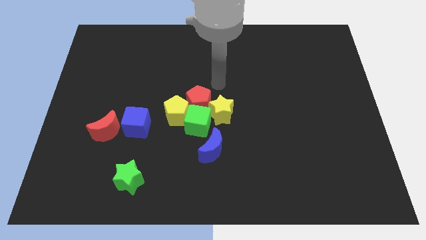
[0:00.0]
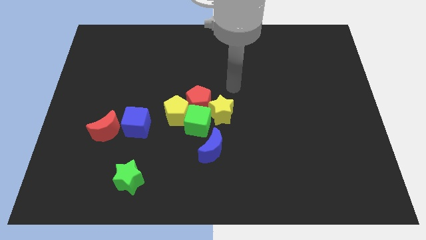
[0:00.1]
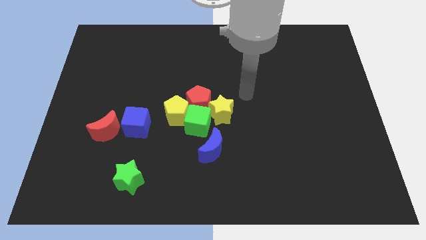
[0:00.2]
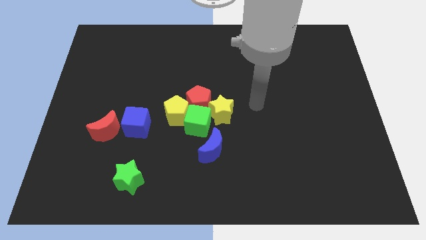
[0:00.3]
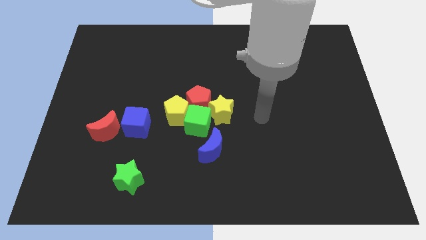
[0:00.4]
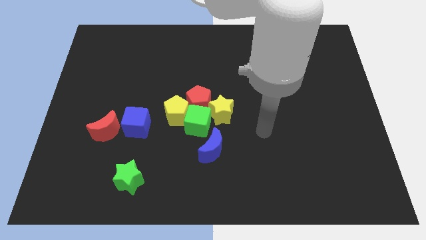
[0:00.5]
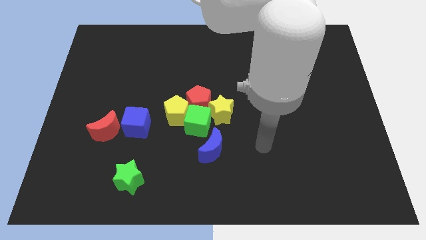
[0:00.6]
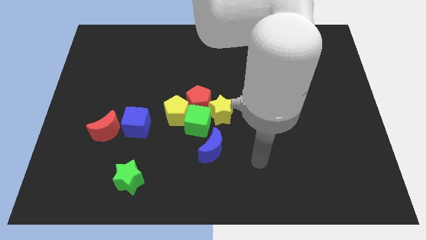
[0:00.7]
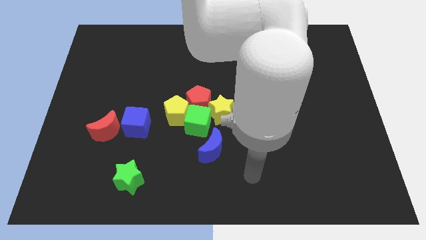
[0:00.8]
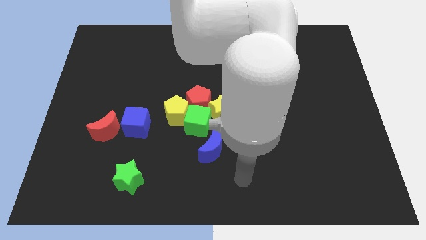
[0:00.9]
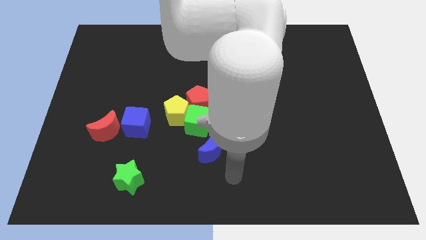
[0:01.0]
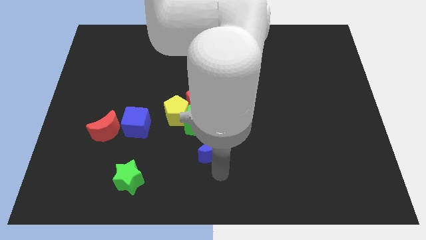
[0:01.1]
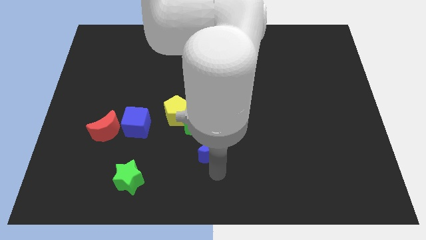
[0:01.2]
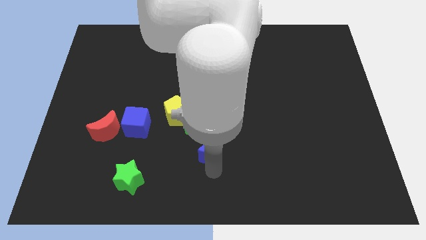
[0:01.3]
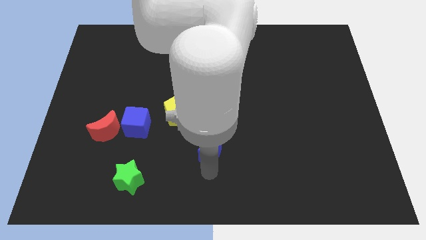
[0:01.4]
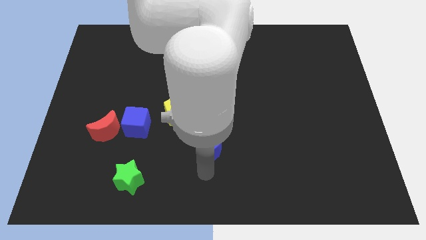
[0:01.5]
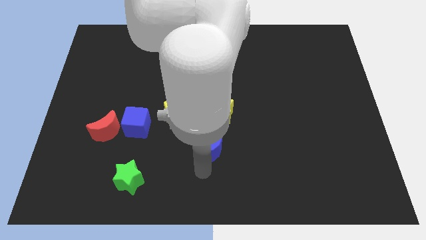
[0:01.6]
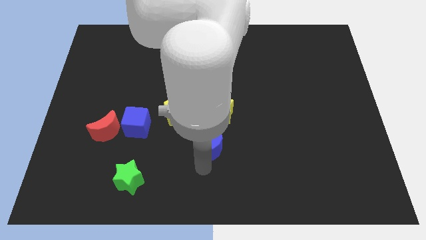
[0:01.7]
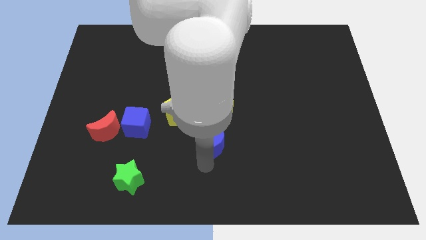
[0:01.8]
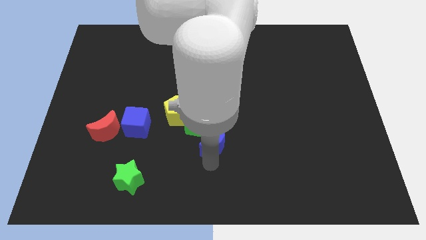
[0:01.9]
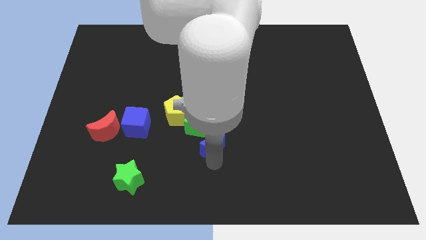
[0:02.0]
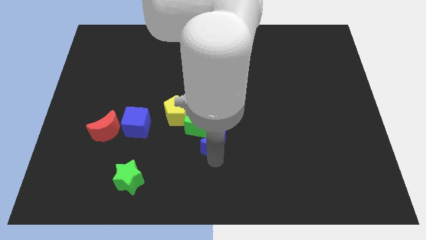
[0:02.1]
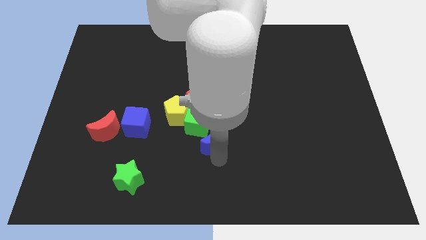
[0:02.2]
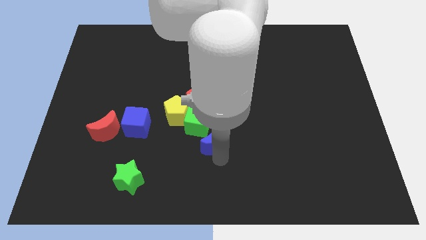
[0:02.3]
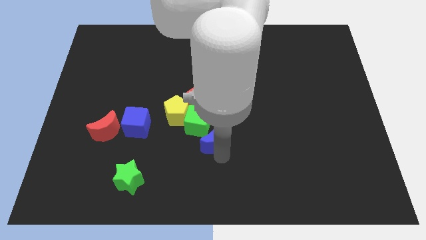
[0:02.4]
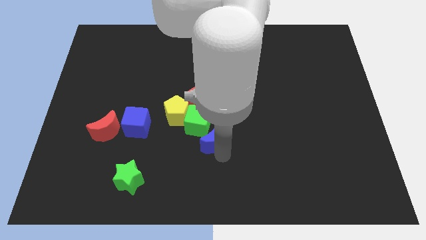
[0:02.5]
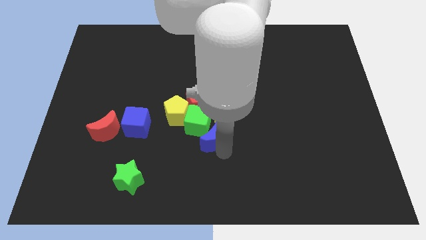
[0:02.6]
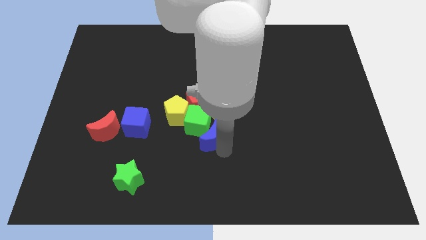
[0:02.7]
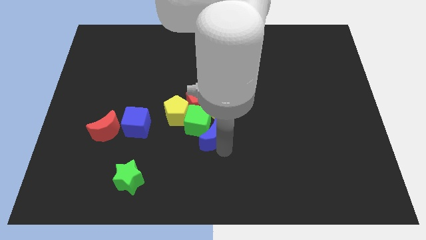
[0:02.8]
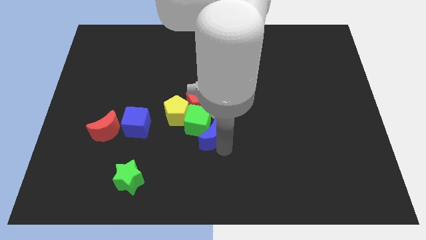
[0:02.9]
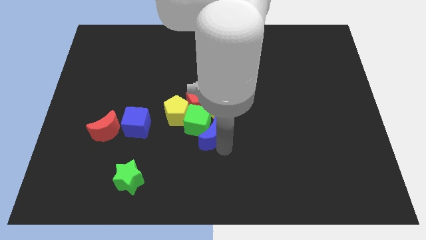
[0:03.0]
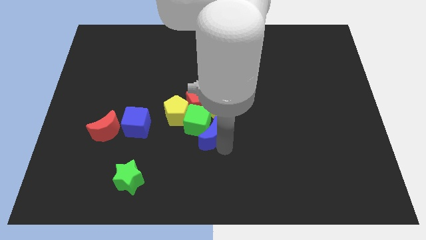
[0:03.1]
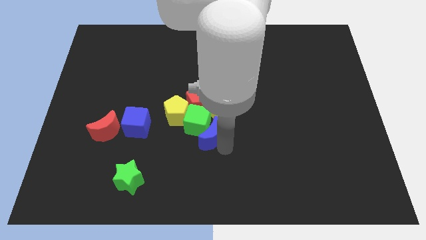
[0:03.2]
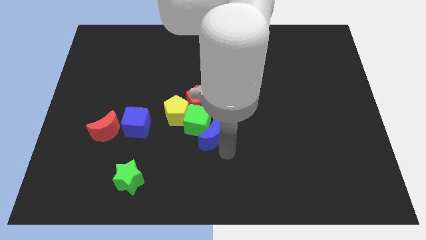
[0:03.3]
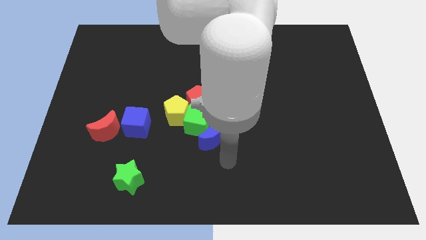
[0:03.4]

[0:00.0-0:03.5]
move the blue moon bottom right of the green cube

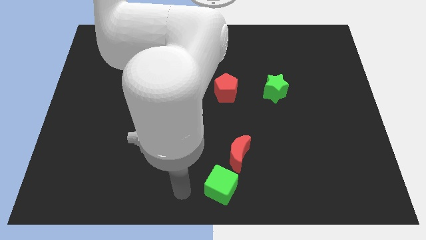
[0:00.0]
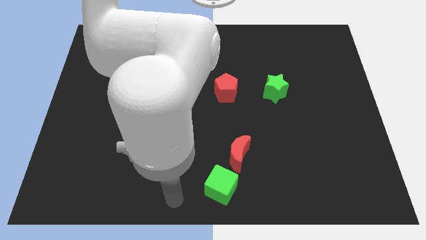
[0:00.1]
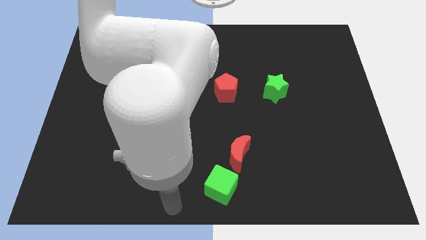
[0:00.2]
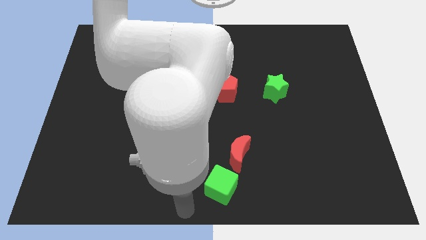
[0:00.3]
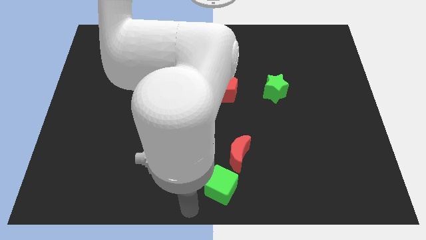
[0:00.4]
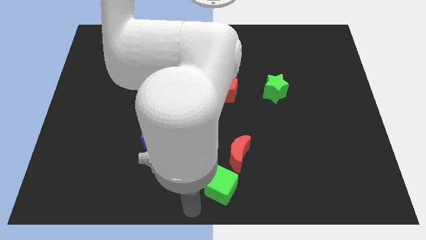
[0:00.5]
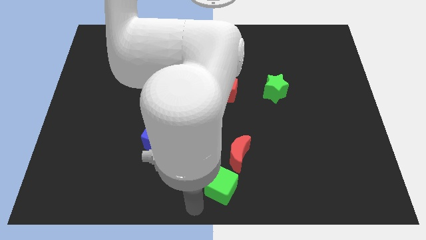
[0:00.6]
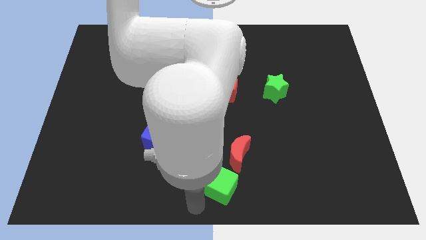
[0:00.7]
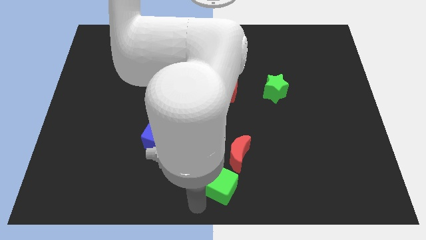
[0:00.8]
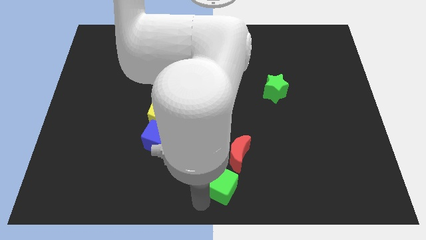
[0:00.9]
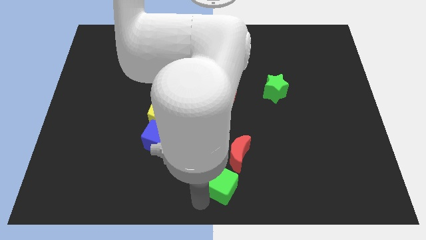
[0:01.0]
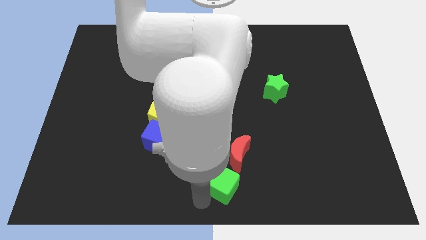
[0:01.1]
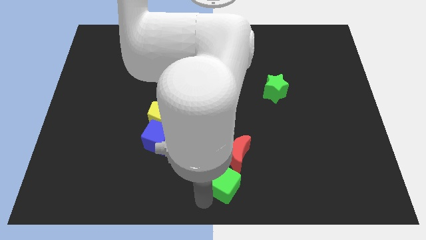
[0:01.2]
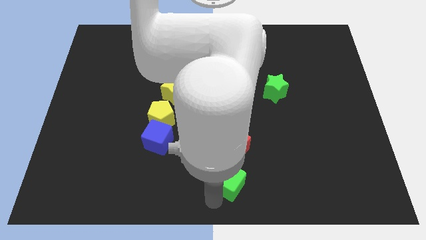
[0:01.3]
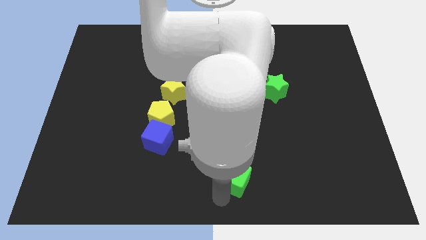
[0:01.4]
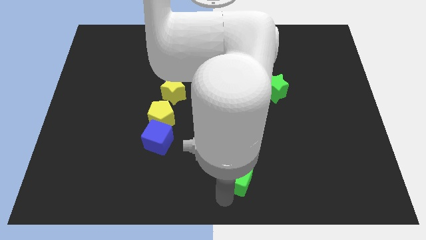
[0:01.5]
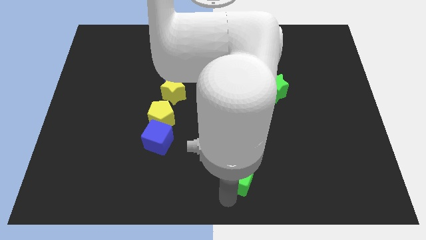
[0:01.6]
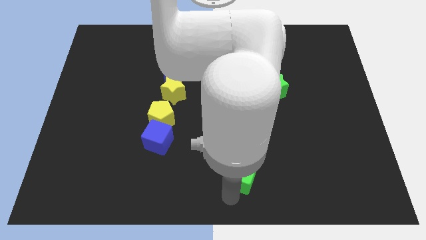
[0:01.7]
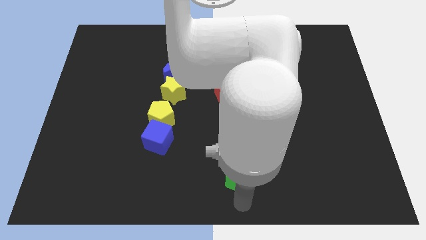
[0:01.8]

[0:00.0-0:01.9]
move the green cube into the red moon

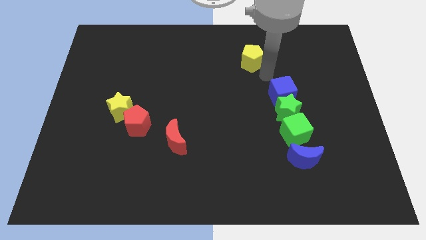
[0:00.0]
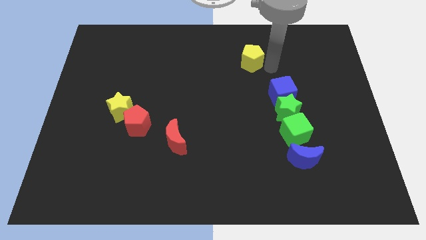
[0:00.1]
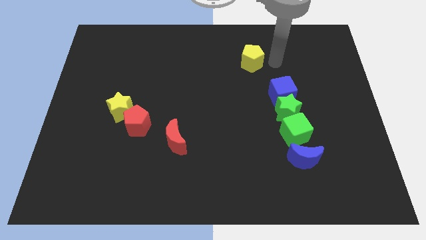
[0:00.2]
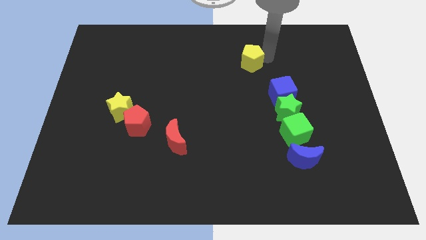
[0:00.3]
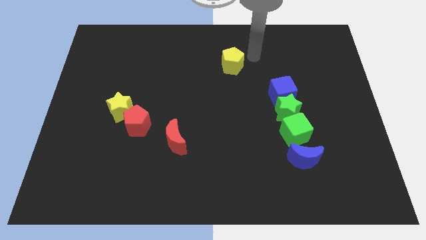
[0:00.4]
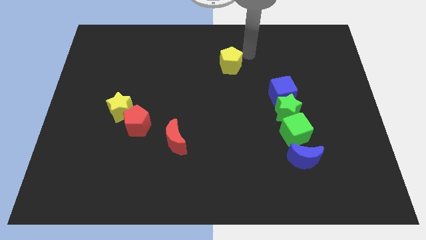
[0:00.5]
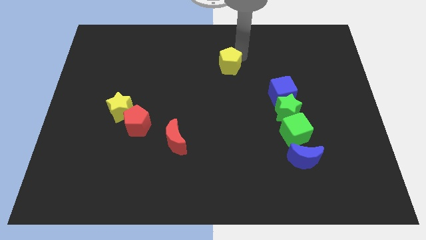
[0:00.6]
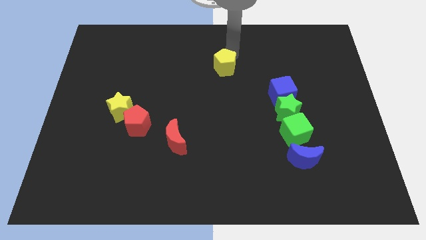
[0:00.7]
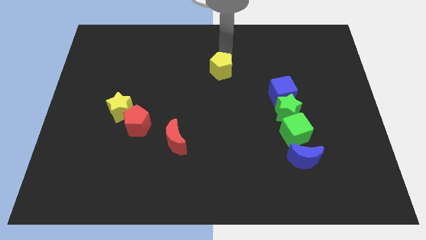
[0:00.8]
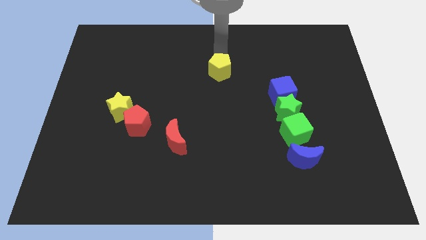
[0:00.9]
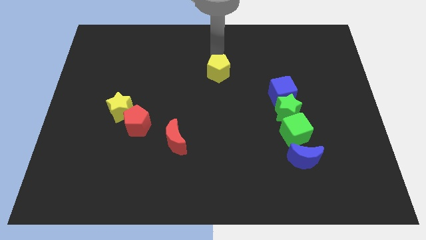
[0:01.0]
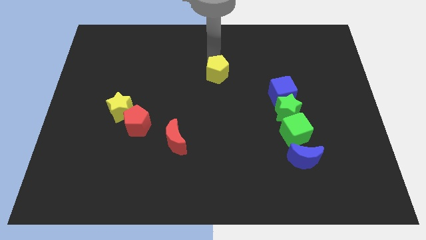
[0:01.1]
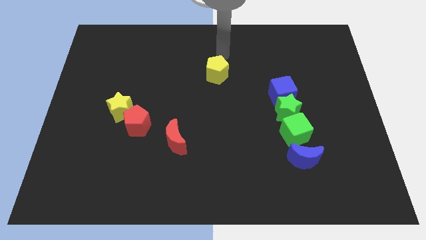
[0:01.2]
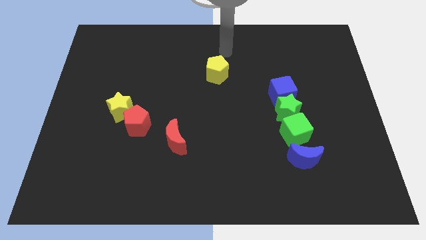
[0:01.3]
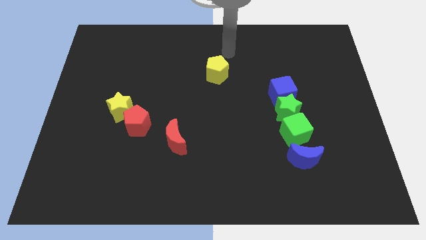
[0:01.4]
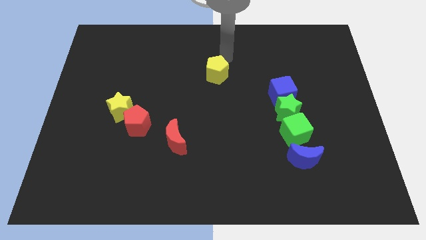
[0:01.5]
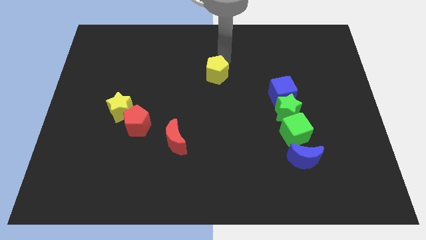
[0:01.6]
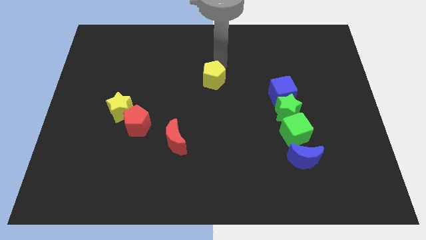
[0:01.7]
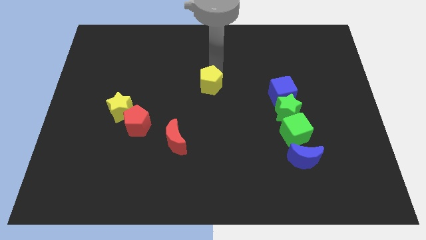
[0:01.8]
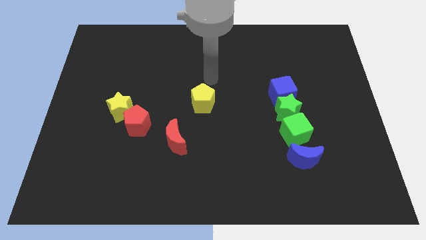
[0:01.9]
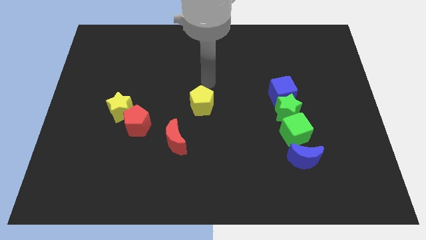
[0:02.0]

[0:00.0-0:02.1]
place yellow pentagon at the center

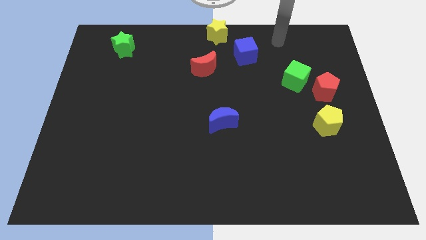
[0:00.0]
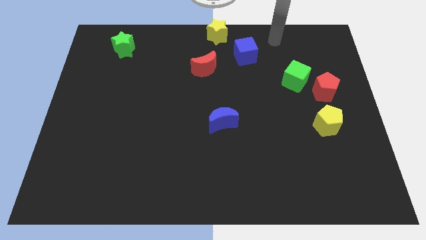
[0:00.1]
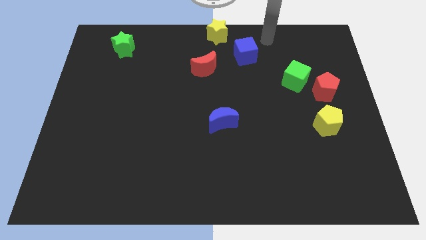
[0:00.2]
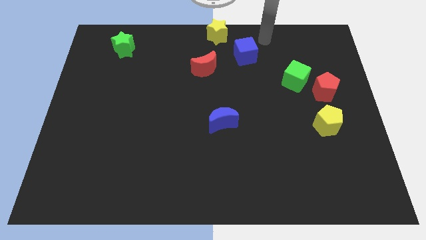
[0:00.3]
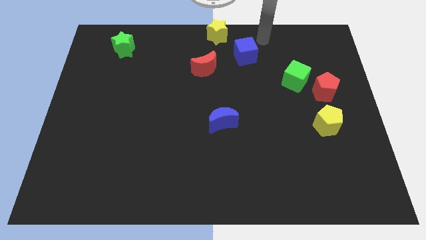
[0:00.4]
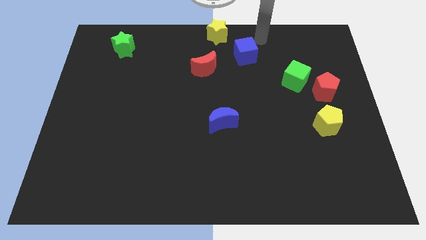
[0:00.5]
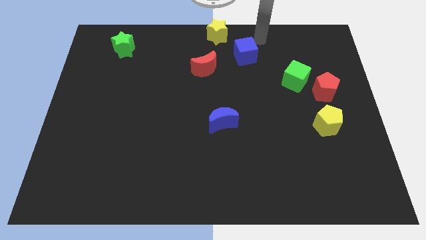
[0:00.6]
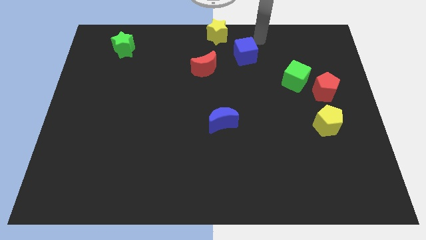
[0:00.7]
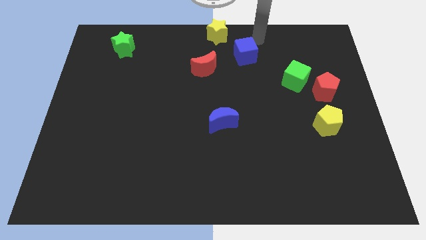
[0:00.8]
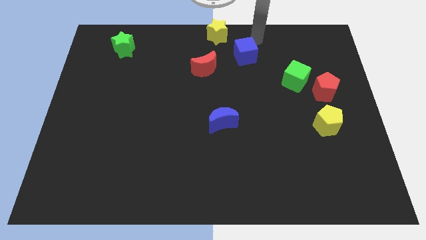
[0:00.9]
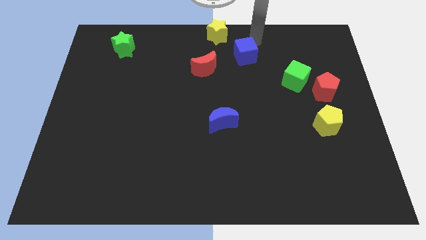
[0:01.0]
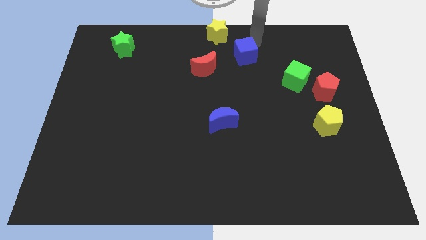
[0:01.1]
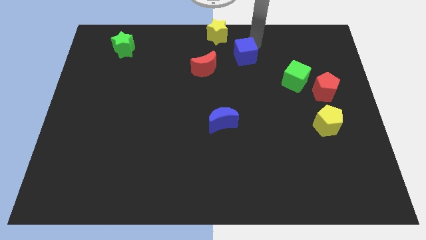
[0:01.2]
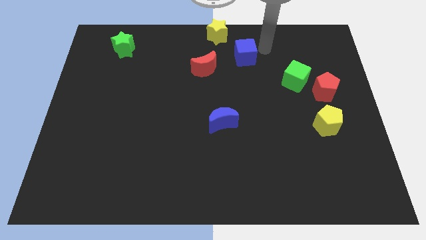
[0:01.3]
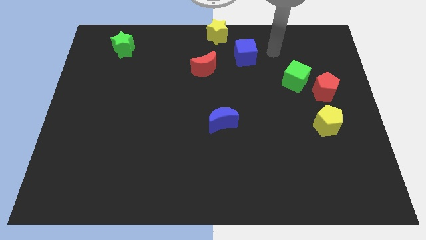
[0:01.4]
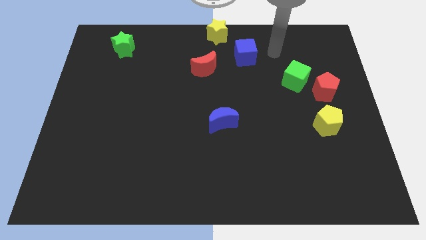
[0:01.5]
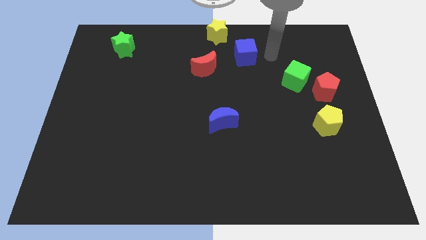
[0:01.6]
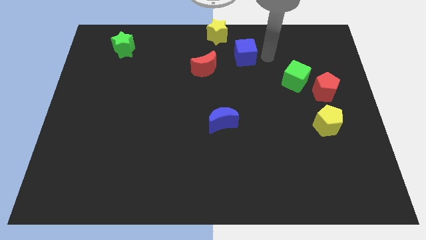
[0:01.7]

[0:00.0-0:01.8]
slightly move the blue cube towards the red moon
